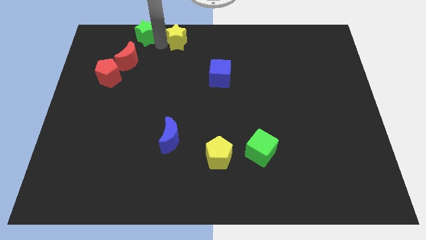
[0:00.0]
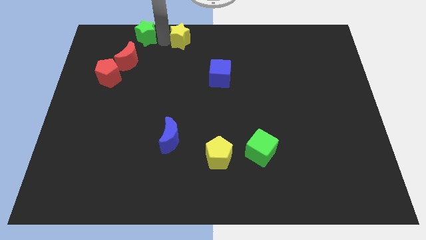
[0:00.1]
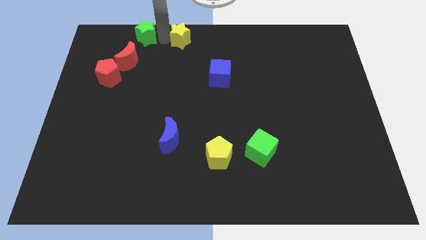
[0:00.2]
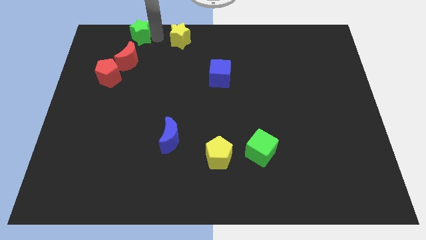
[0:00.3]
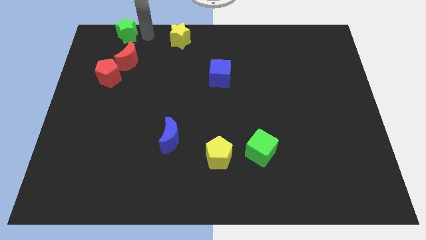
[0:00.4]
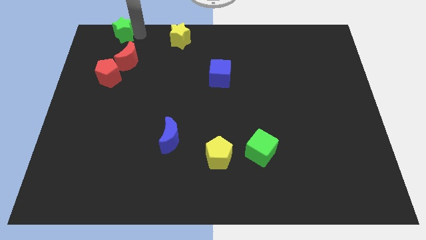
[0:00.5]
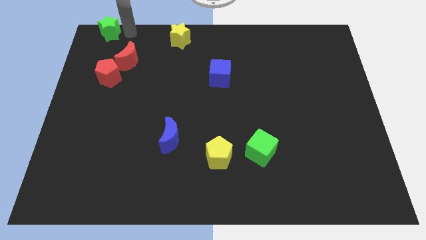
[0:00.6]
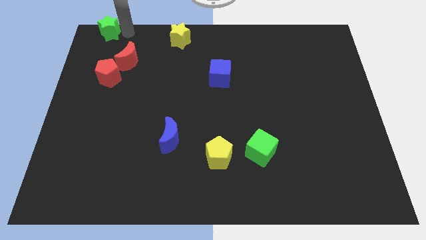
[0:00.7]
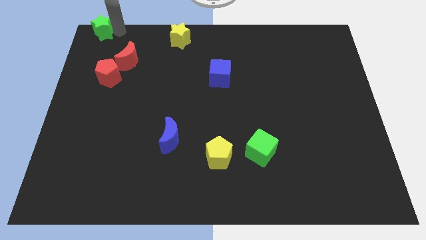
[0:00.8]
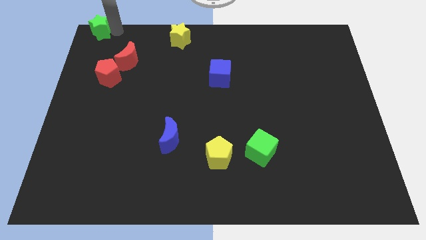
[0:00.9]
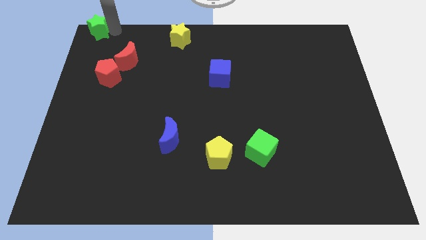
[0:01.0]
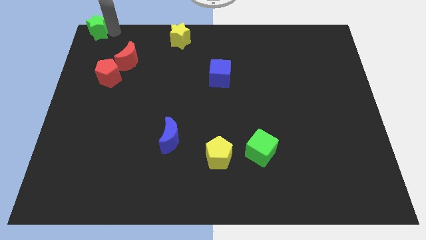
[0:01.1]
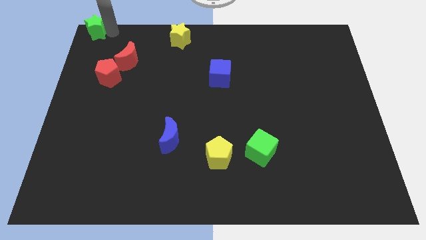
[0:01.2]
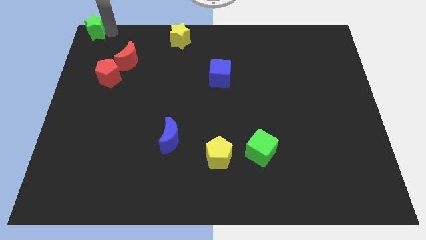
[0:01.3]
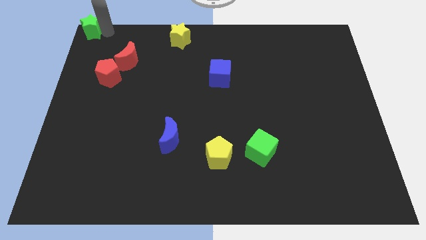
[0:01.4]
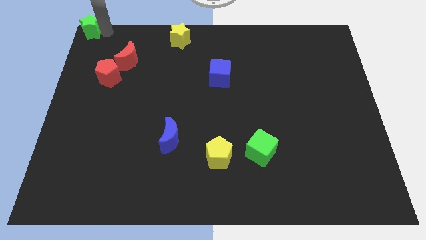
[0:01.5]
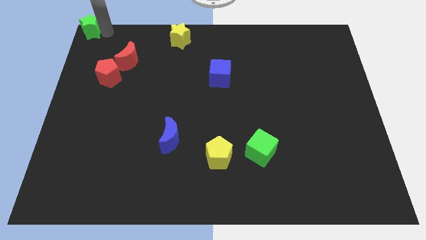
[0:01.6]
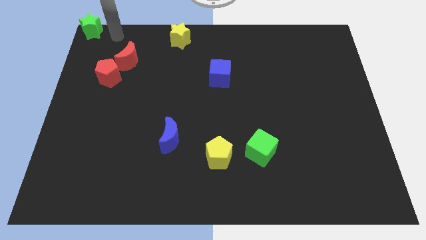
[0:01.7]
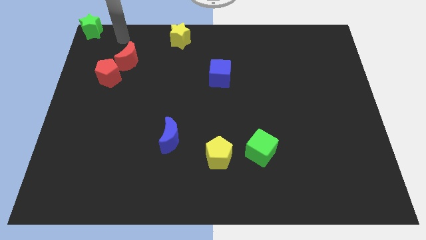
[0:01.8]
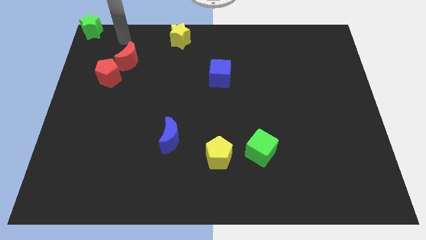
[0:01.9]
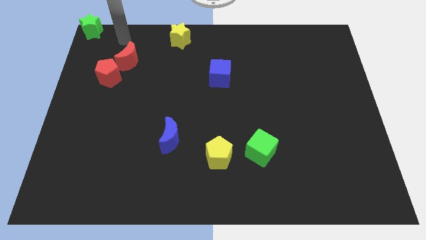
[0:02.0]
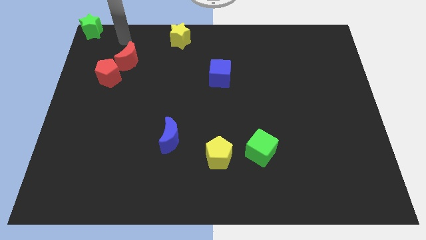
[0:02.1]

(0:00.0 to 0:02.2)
move green star to the top left corner

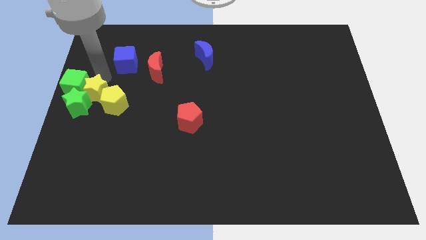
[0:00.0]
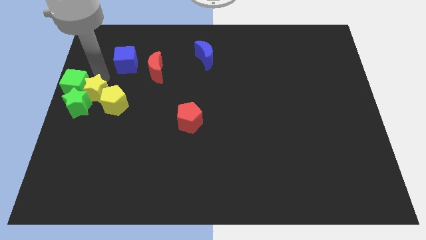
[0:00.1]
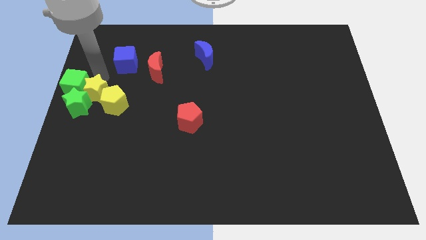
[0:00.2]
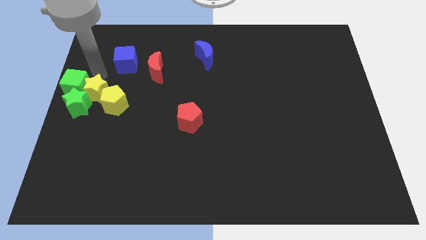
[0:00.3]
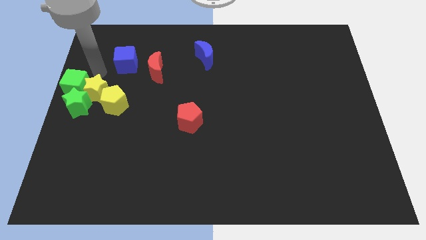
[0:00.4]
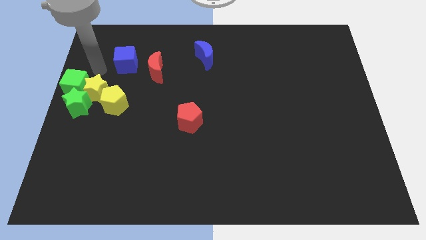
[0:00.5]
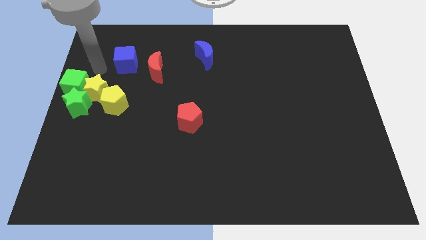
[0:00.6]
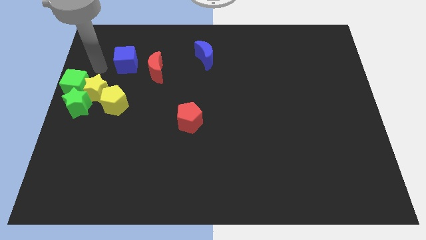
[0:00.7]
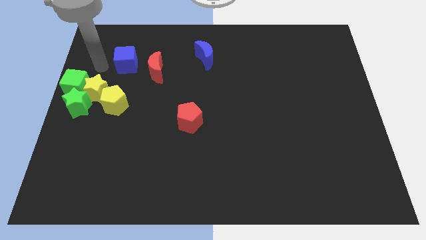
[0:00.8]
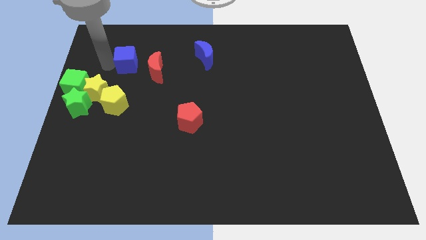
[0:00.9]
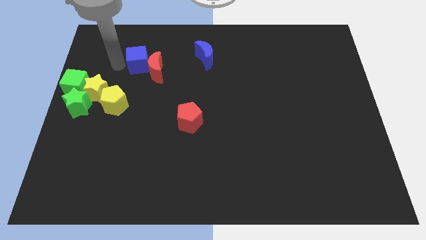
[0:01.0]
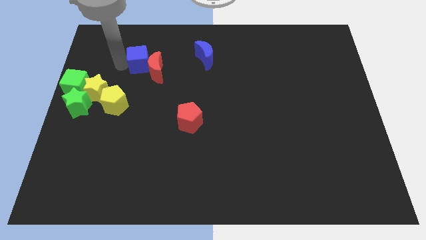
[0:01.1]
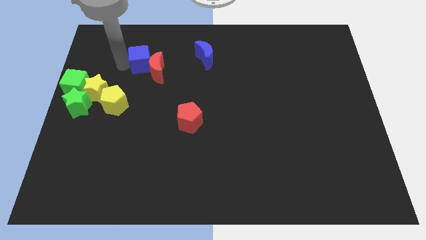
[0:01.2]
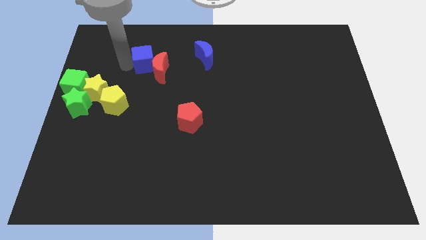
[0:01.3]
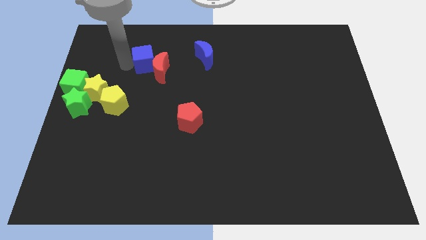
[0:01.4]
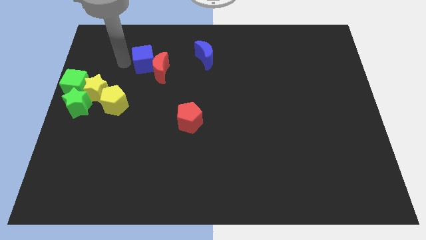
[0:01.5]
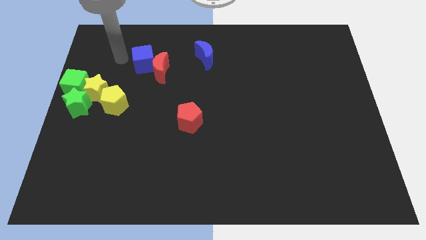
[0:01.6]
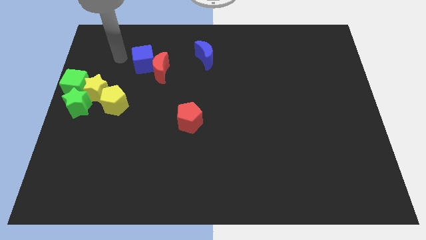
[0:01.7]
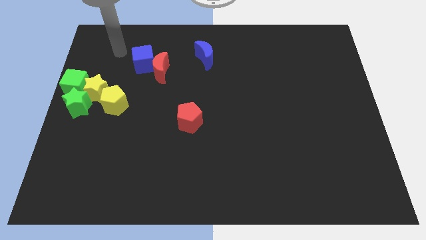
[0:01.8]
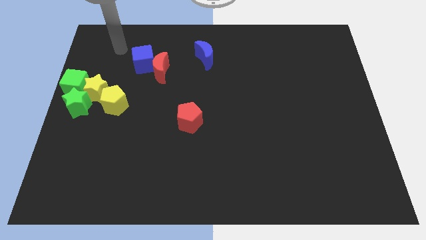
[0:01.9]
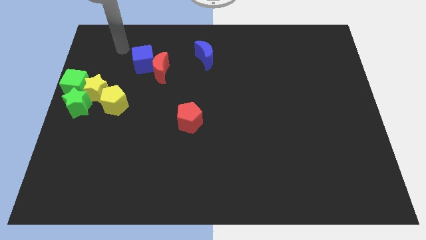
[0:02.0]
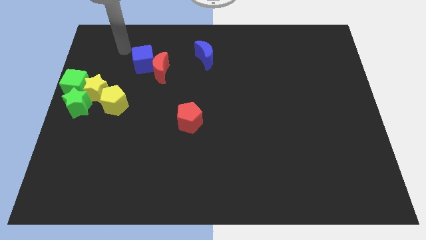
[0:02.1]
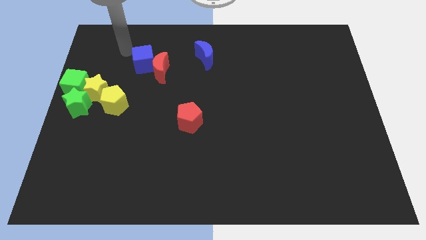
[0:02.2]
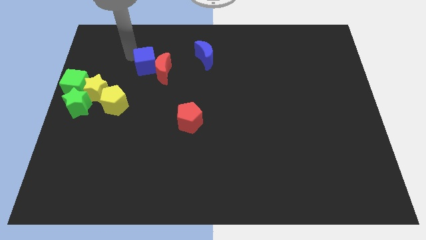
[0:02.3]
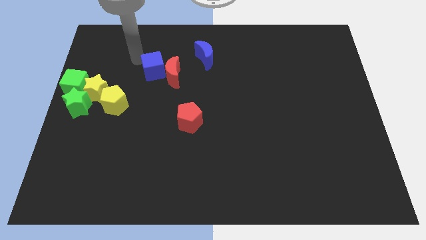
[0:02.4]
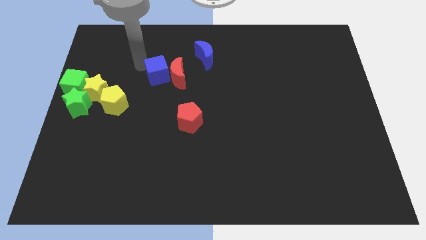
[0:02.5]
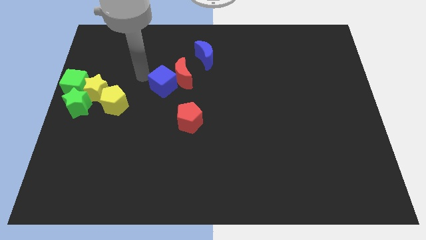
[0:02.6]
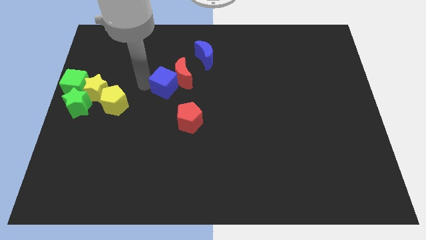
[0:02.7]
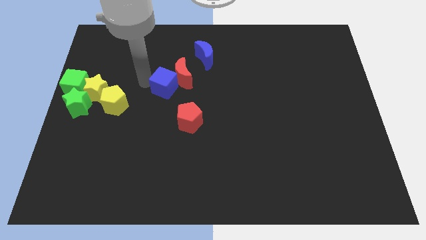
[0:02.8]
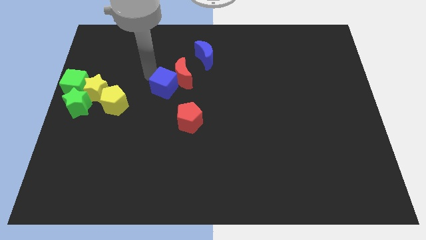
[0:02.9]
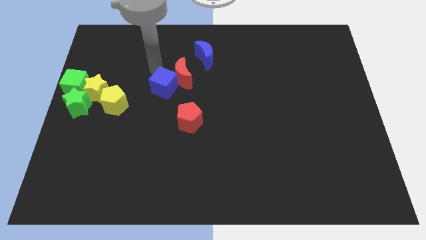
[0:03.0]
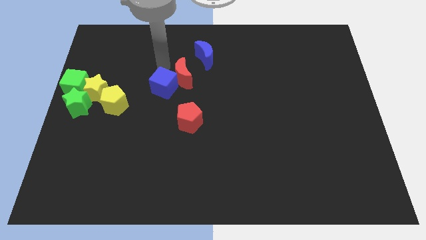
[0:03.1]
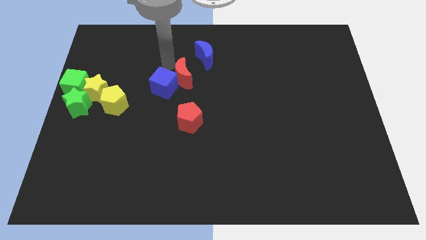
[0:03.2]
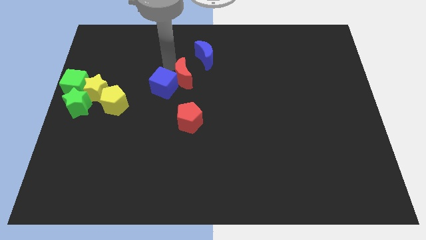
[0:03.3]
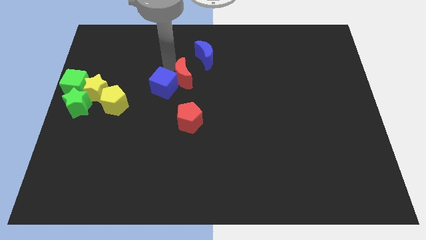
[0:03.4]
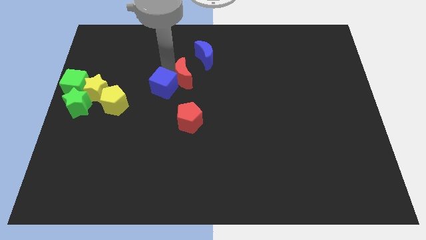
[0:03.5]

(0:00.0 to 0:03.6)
push the blue cube and red crescent towards the top side of the red pentagon

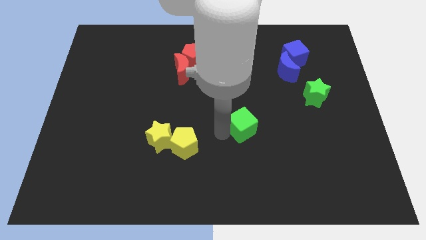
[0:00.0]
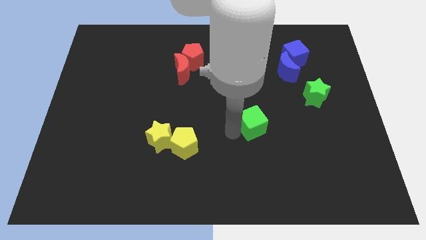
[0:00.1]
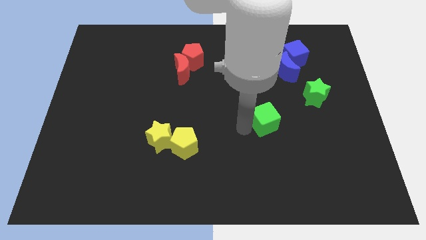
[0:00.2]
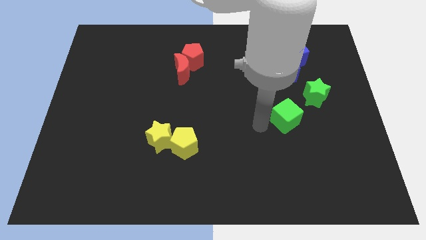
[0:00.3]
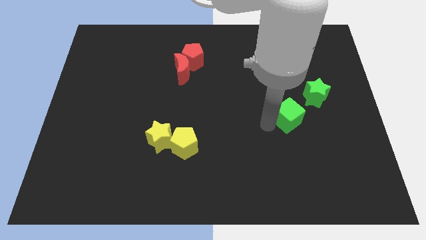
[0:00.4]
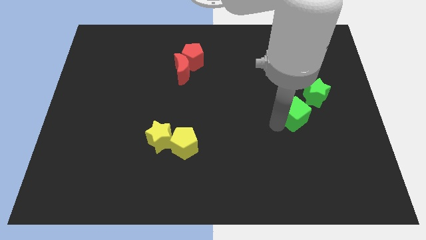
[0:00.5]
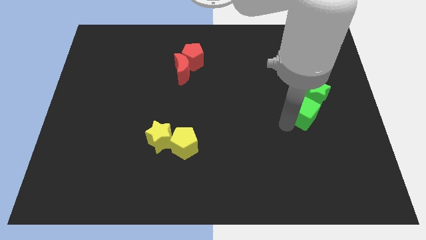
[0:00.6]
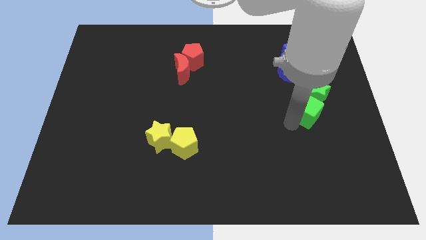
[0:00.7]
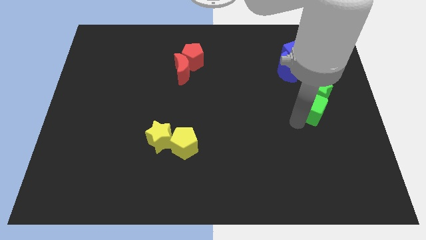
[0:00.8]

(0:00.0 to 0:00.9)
place the green cube close to the green star

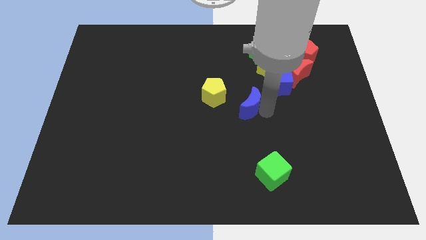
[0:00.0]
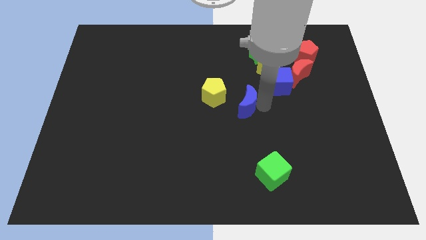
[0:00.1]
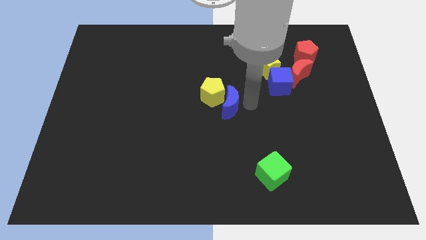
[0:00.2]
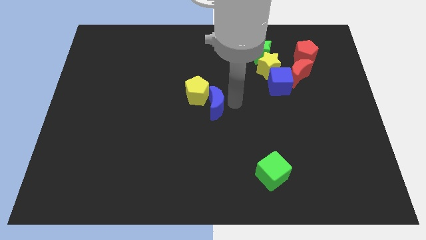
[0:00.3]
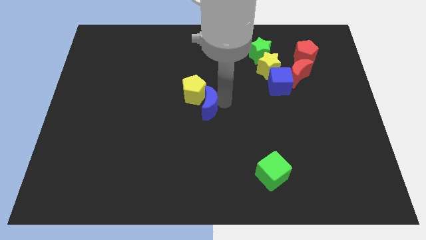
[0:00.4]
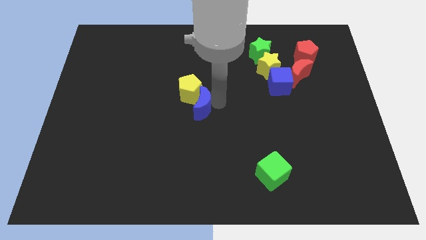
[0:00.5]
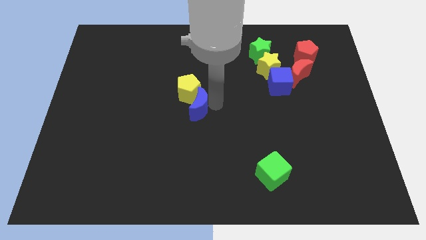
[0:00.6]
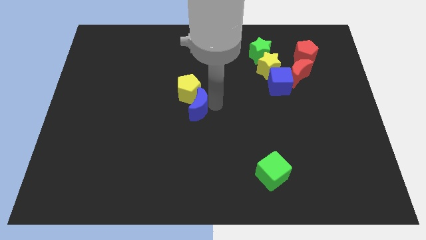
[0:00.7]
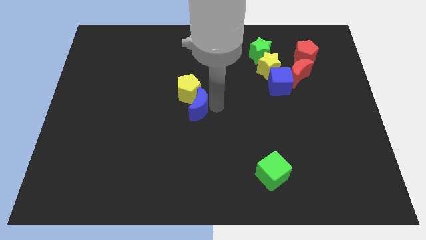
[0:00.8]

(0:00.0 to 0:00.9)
place the blue crescent below the yellow pentagon

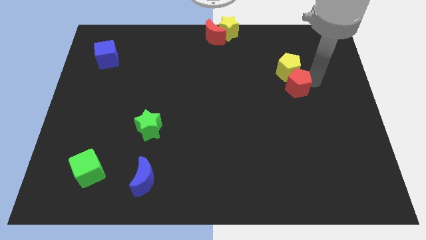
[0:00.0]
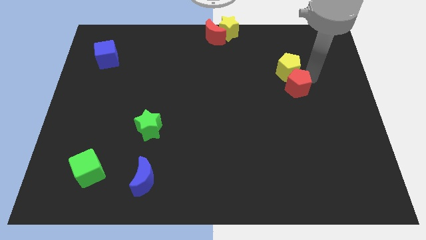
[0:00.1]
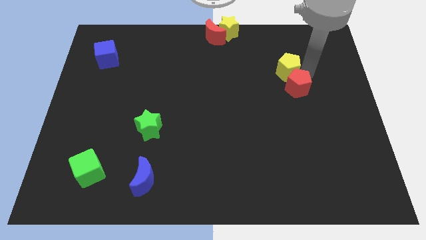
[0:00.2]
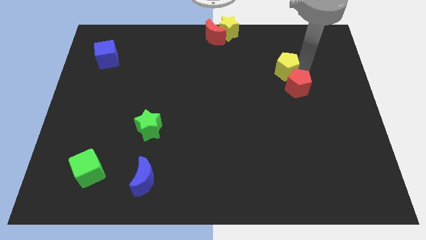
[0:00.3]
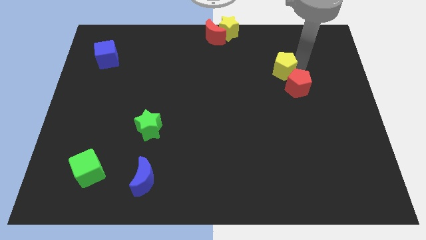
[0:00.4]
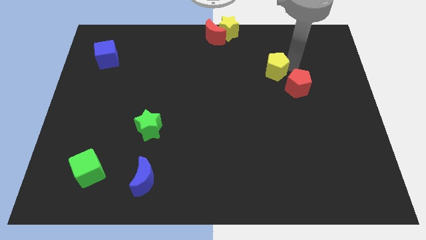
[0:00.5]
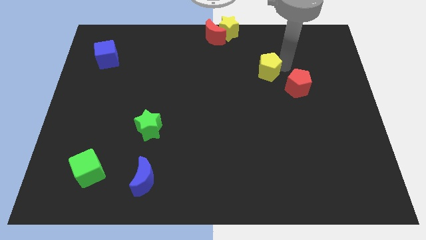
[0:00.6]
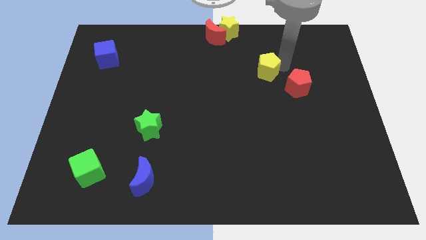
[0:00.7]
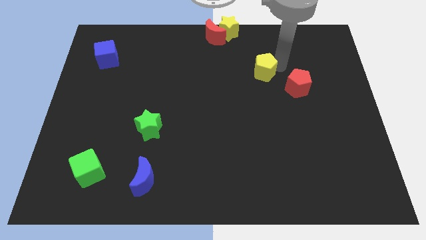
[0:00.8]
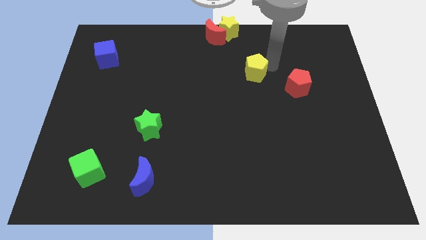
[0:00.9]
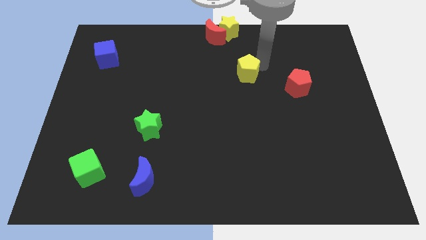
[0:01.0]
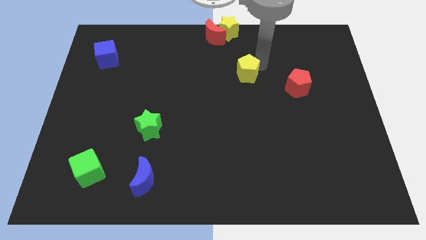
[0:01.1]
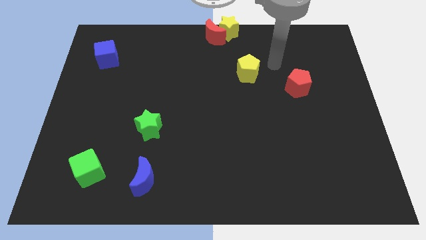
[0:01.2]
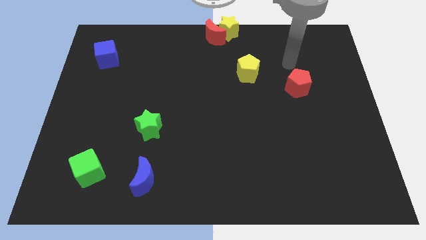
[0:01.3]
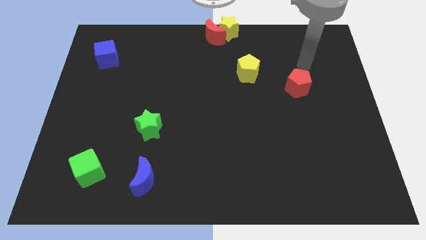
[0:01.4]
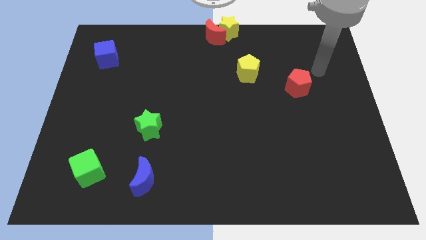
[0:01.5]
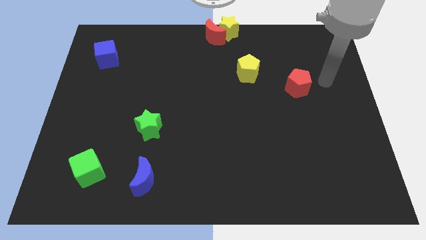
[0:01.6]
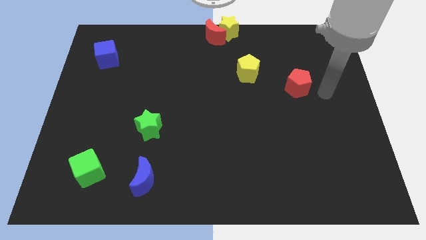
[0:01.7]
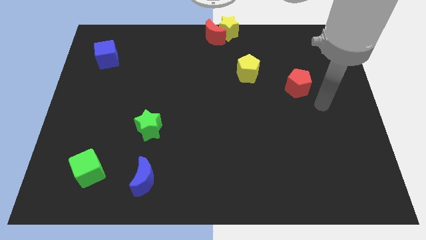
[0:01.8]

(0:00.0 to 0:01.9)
separate the yellow pentagon from the red pentagon
